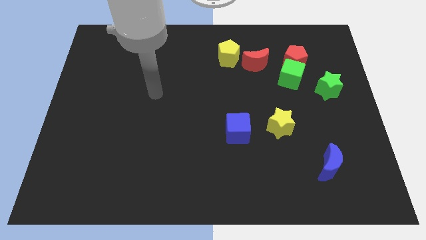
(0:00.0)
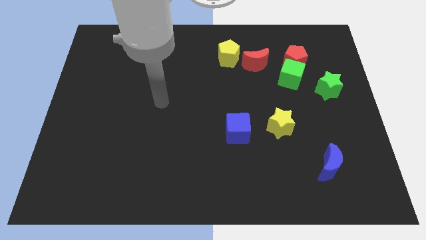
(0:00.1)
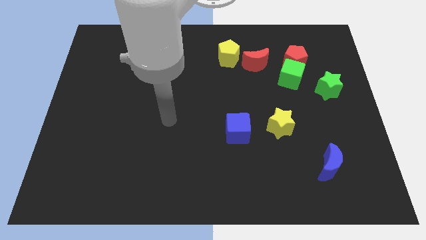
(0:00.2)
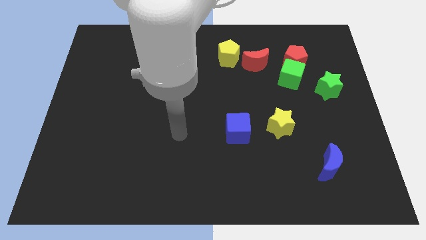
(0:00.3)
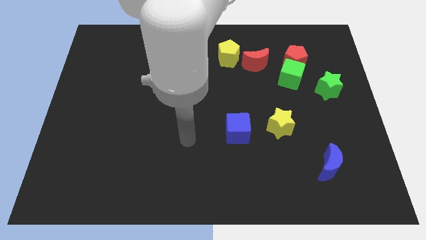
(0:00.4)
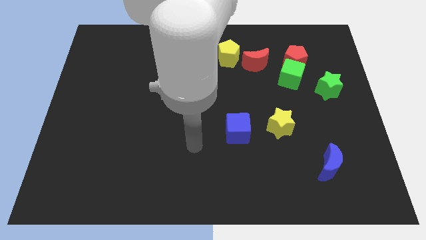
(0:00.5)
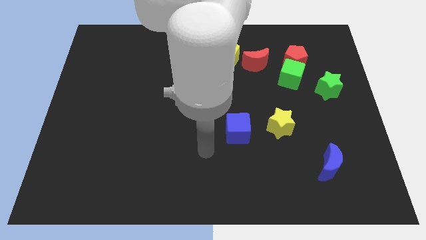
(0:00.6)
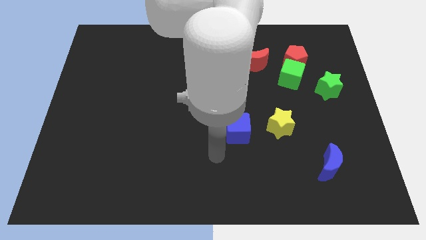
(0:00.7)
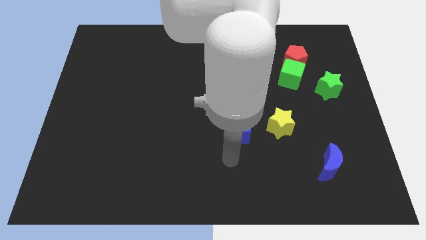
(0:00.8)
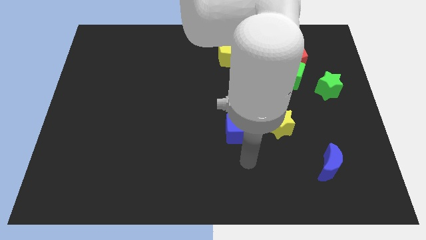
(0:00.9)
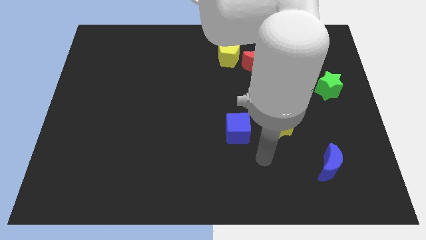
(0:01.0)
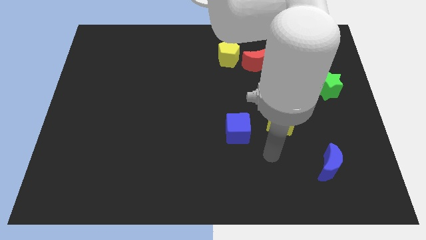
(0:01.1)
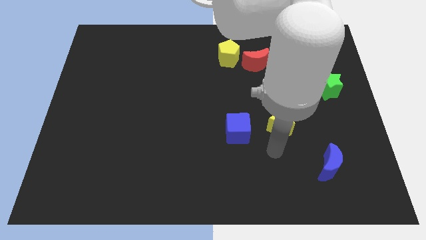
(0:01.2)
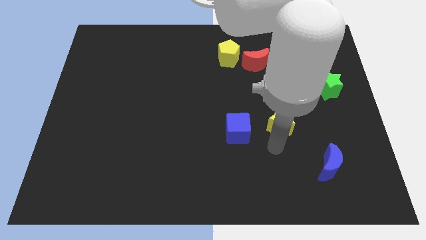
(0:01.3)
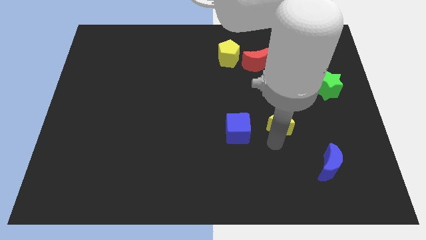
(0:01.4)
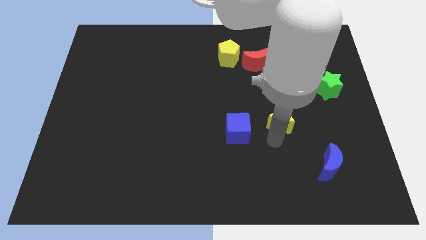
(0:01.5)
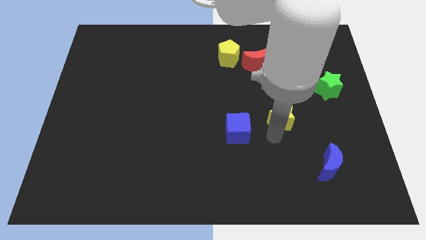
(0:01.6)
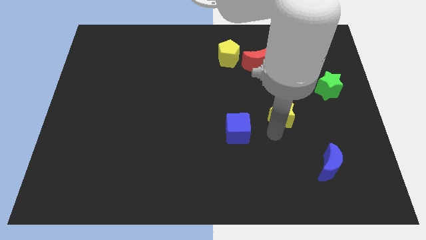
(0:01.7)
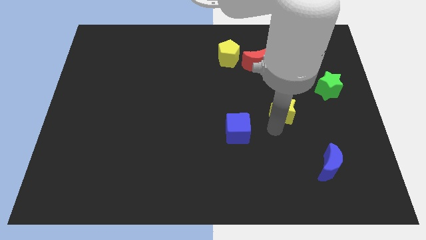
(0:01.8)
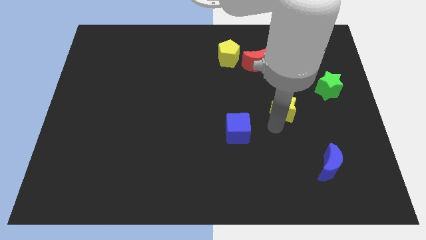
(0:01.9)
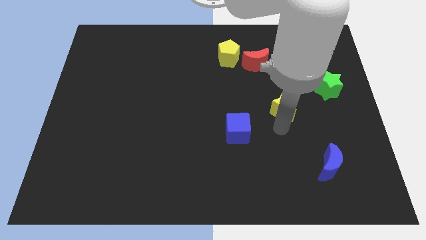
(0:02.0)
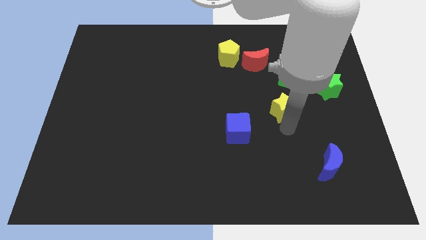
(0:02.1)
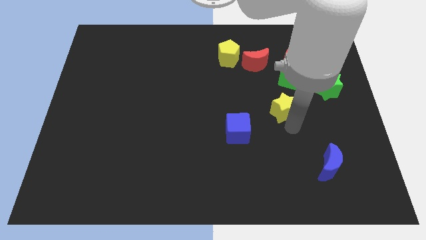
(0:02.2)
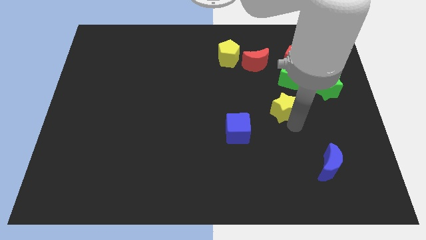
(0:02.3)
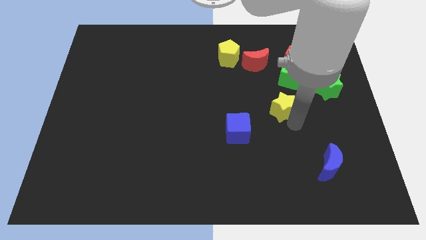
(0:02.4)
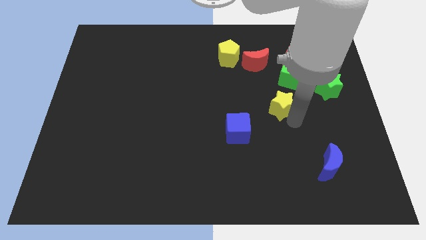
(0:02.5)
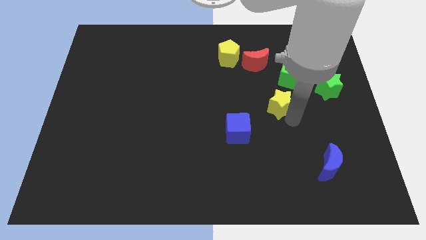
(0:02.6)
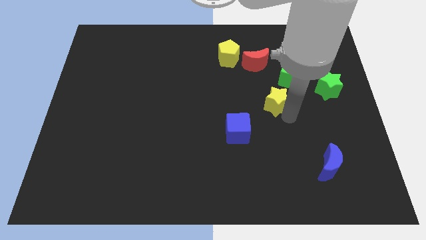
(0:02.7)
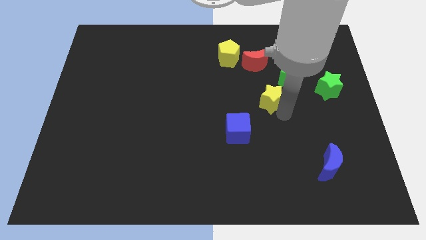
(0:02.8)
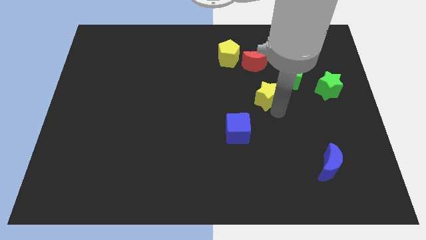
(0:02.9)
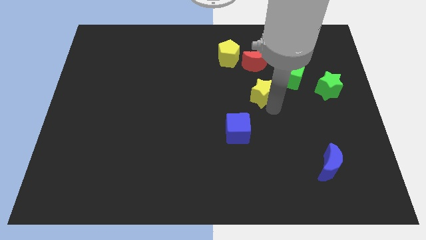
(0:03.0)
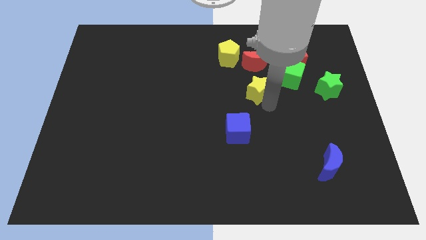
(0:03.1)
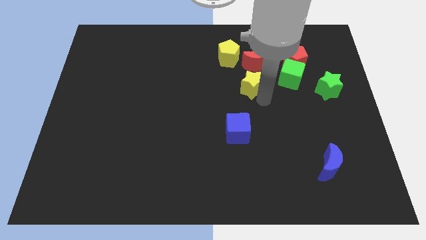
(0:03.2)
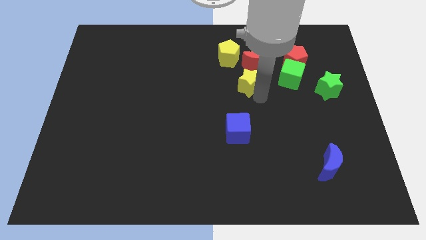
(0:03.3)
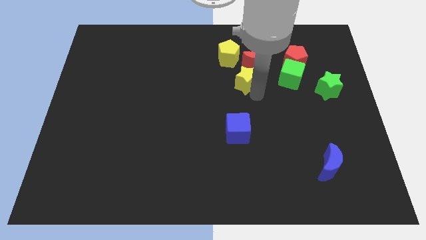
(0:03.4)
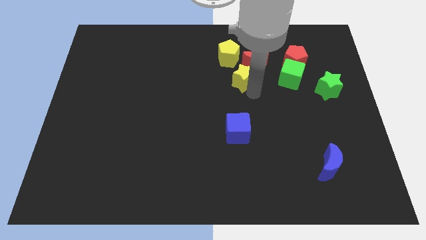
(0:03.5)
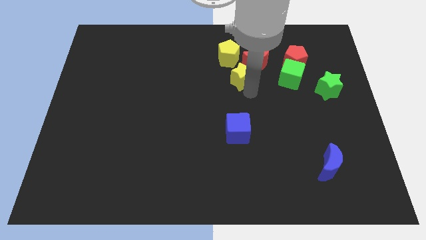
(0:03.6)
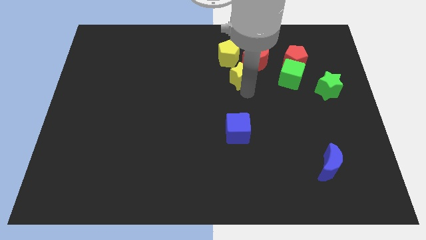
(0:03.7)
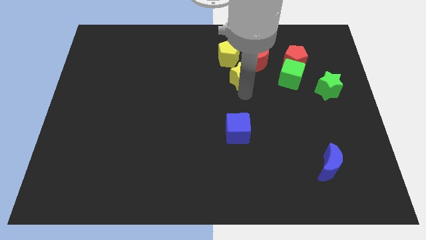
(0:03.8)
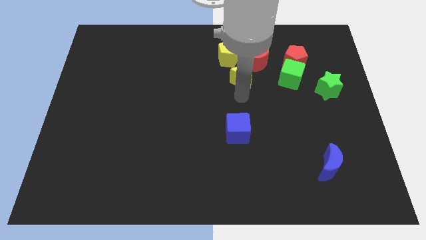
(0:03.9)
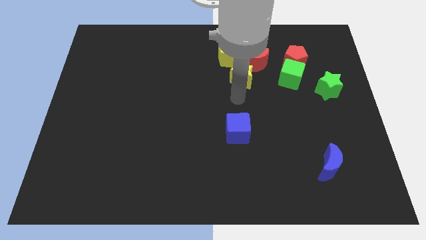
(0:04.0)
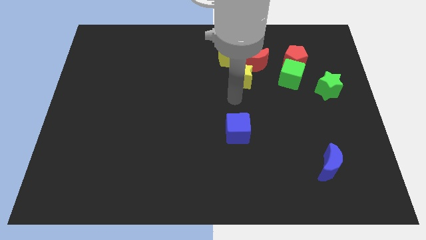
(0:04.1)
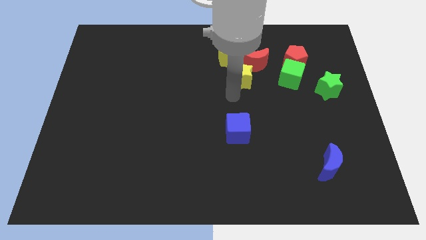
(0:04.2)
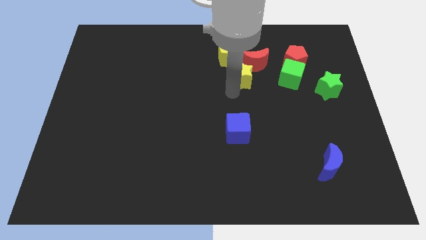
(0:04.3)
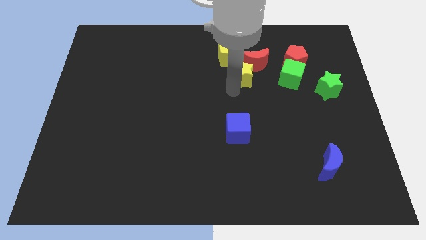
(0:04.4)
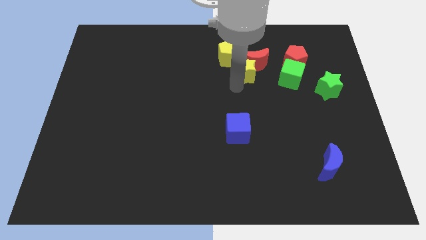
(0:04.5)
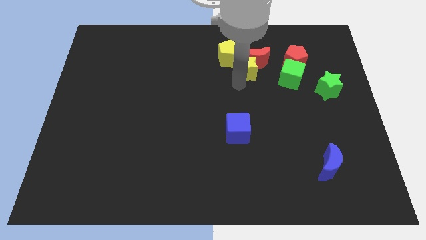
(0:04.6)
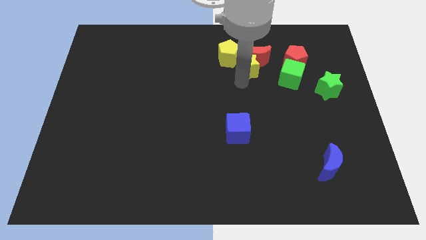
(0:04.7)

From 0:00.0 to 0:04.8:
move the yellow star to the red moon

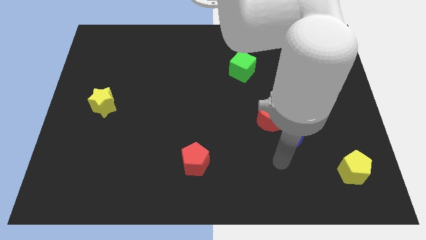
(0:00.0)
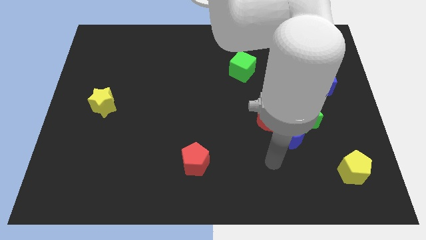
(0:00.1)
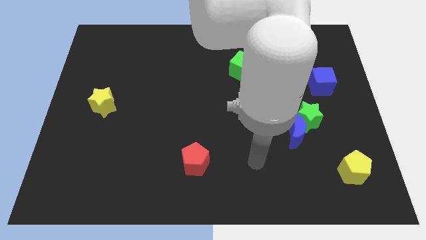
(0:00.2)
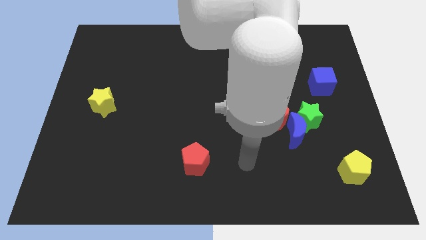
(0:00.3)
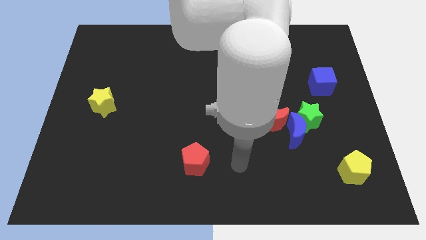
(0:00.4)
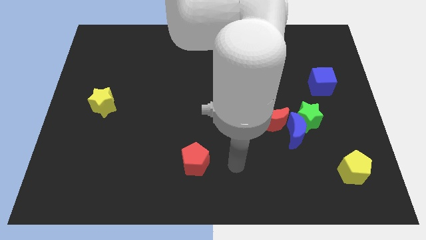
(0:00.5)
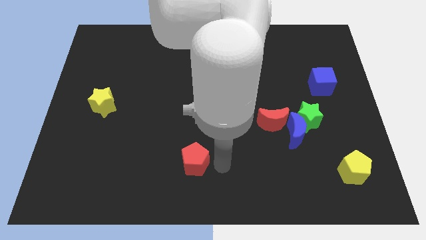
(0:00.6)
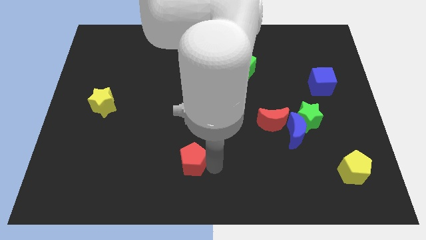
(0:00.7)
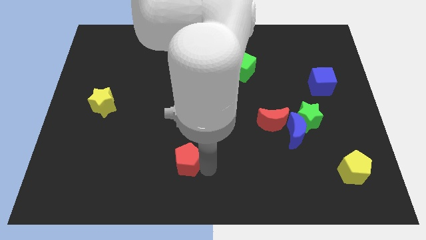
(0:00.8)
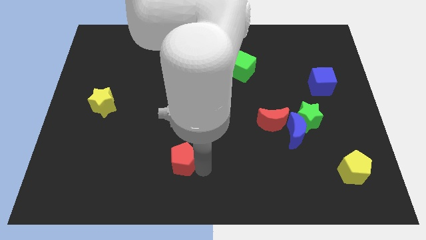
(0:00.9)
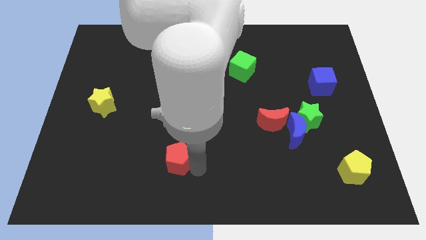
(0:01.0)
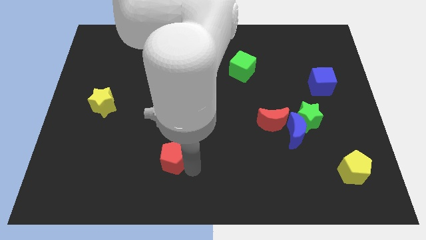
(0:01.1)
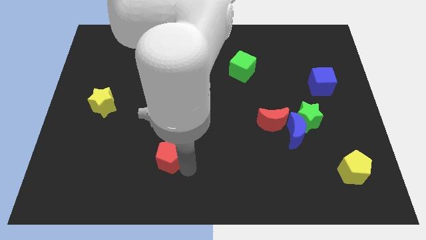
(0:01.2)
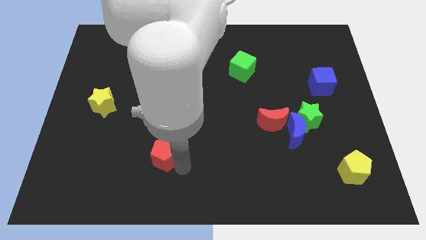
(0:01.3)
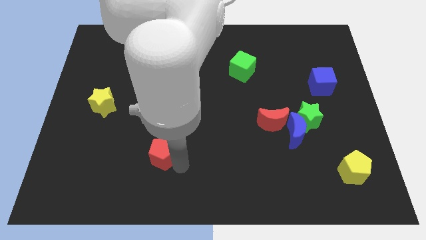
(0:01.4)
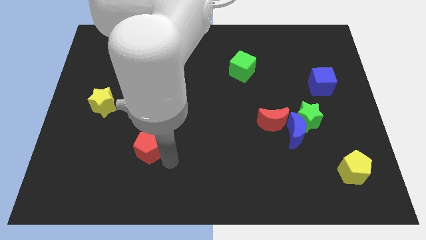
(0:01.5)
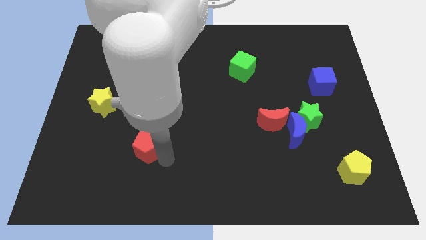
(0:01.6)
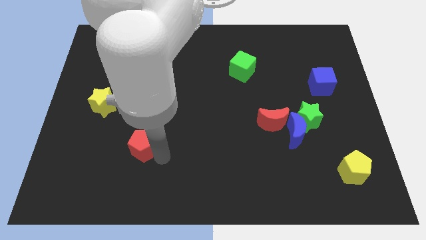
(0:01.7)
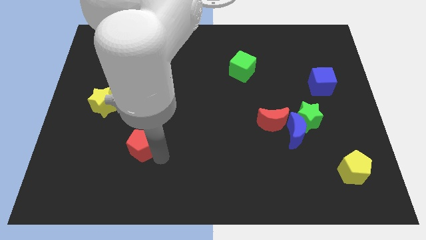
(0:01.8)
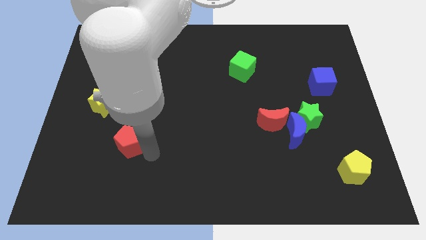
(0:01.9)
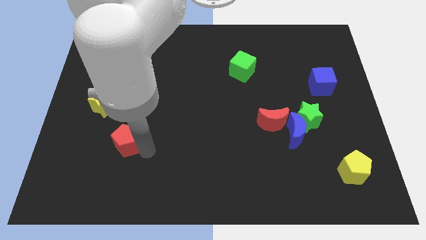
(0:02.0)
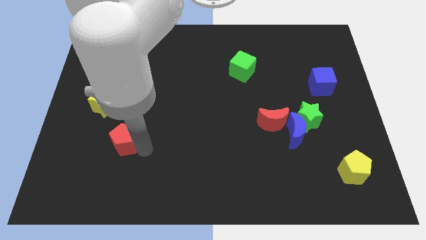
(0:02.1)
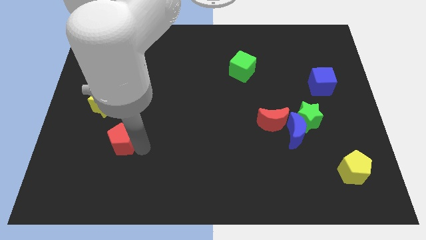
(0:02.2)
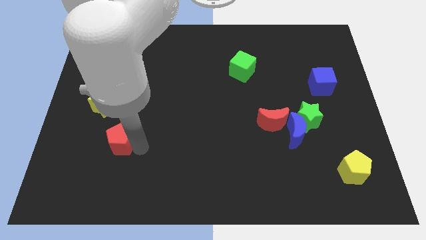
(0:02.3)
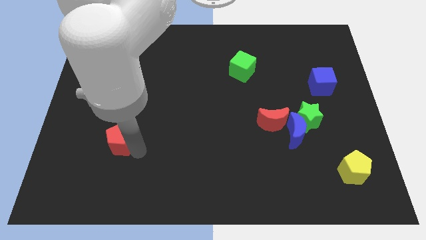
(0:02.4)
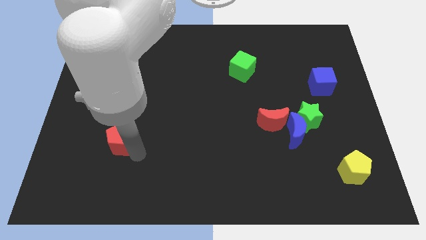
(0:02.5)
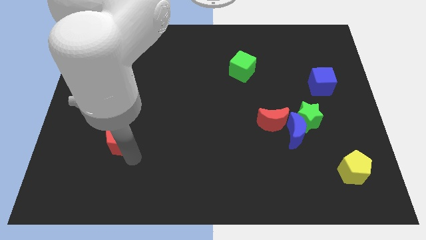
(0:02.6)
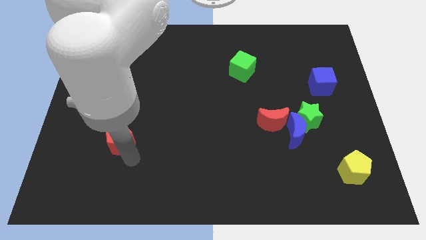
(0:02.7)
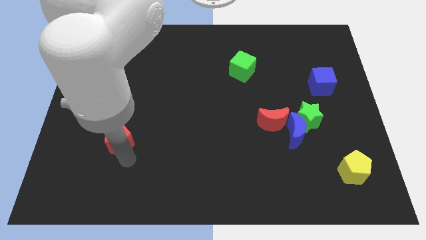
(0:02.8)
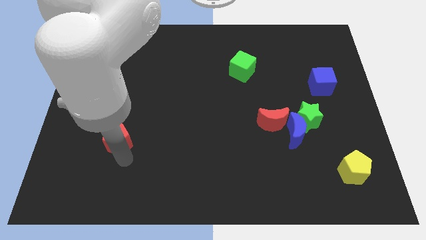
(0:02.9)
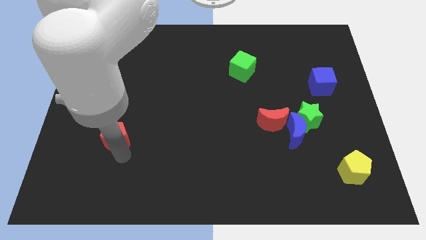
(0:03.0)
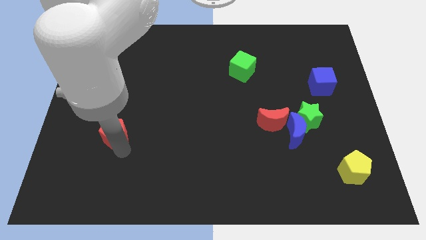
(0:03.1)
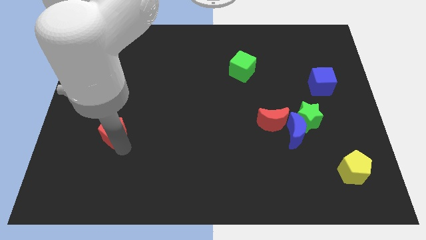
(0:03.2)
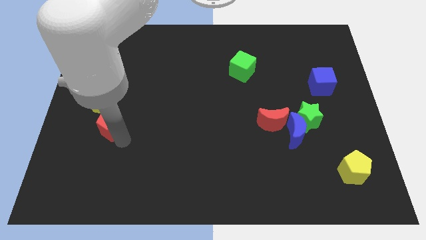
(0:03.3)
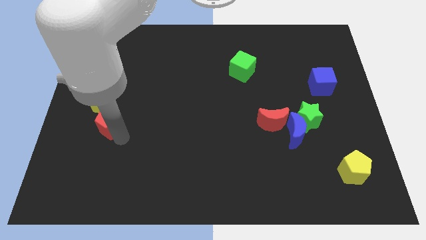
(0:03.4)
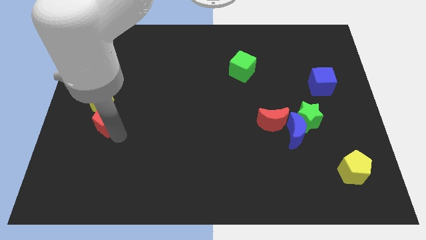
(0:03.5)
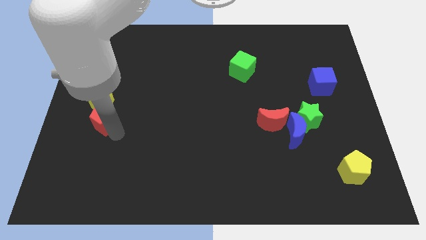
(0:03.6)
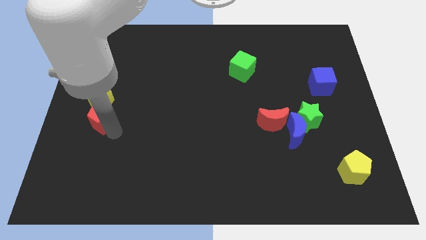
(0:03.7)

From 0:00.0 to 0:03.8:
push the red pentagon towards the yellow star
